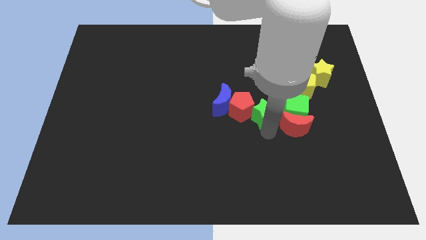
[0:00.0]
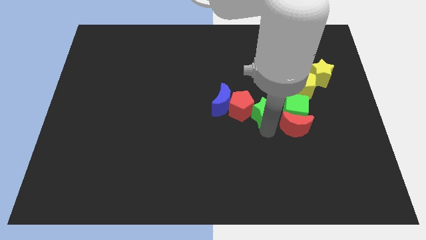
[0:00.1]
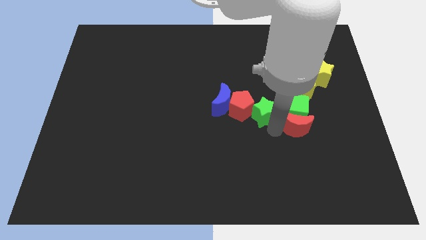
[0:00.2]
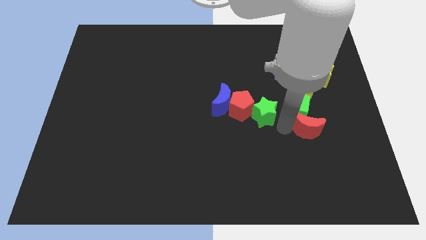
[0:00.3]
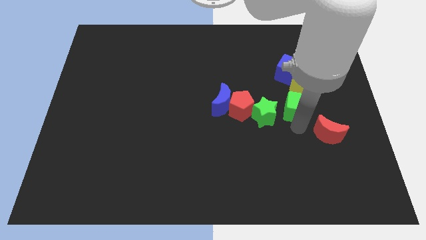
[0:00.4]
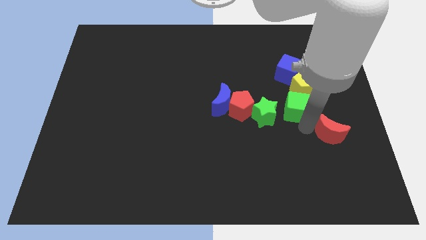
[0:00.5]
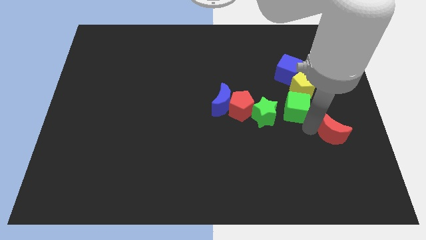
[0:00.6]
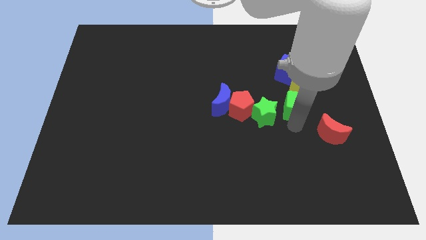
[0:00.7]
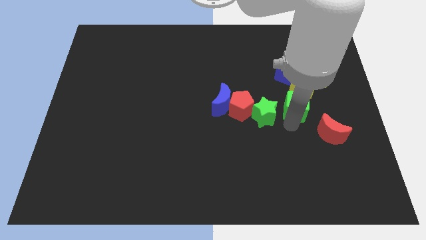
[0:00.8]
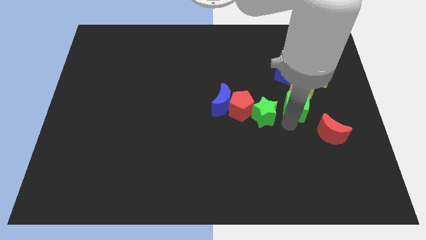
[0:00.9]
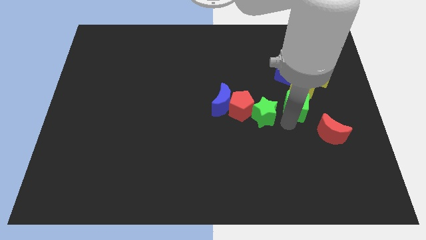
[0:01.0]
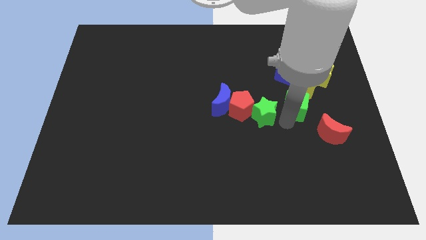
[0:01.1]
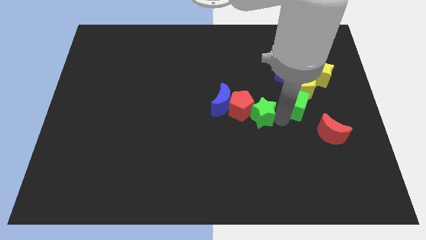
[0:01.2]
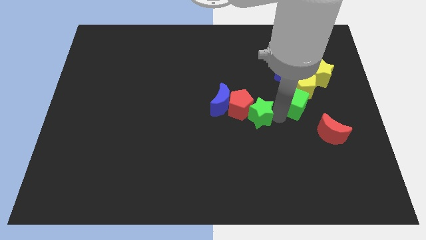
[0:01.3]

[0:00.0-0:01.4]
separate the red crescent and green cube

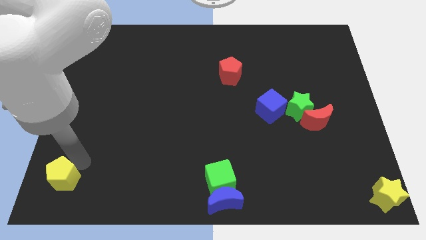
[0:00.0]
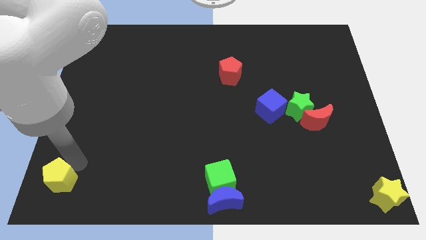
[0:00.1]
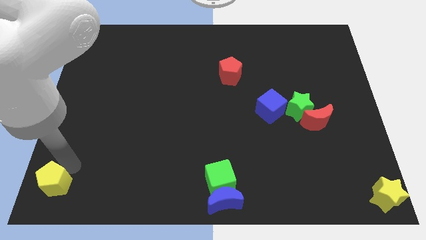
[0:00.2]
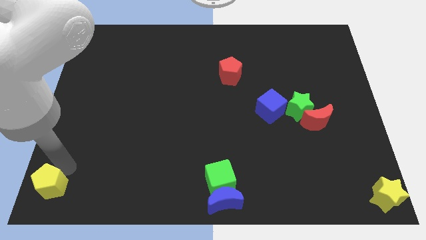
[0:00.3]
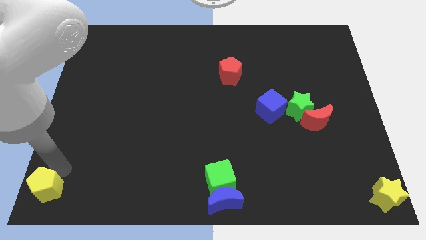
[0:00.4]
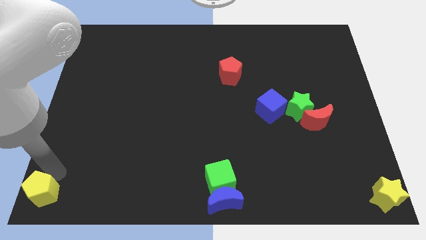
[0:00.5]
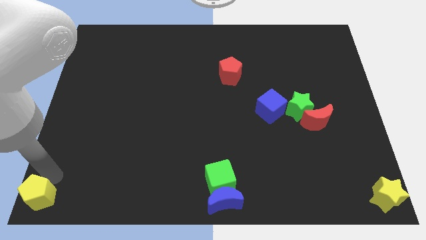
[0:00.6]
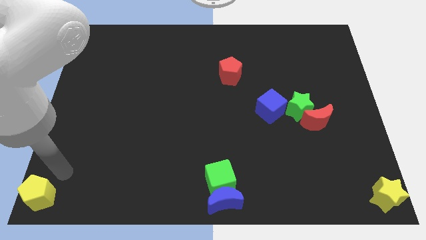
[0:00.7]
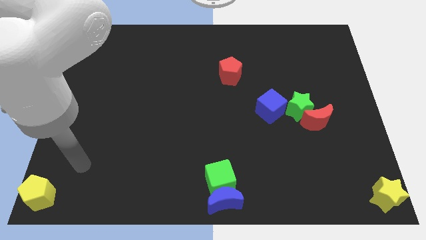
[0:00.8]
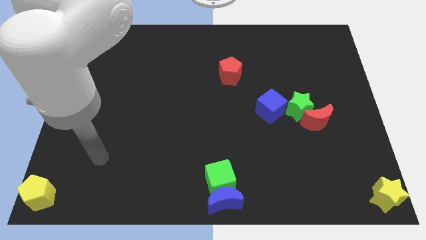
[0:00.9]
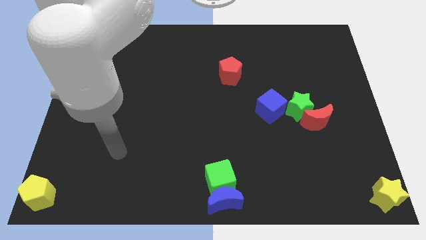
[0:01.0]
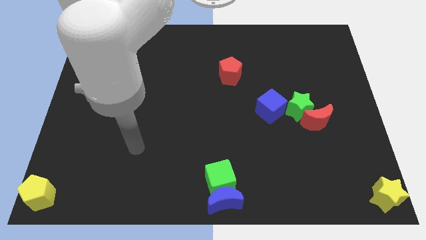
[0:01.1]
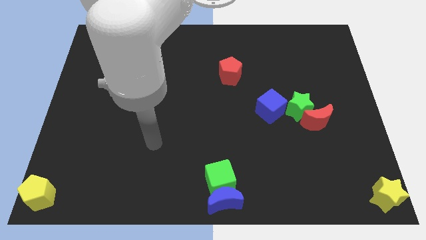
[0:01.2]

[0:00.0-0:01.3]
push the yellow pentagon to the bottom left

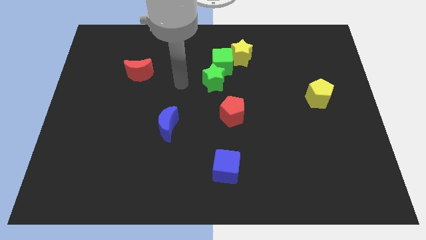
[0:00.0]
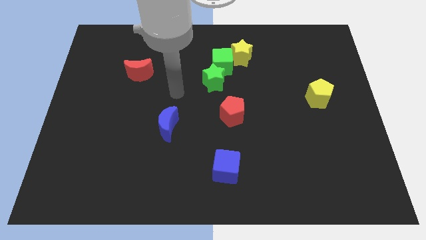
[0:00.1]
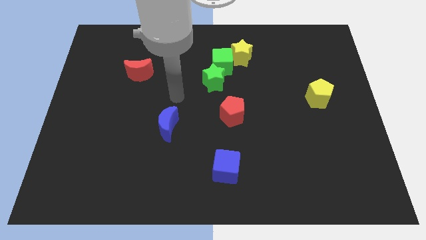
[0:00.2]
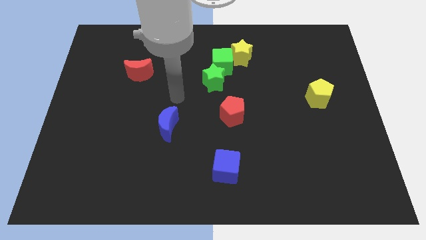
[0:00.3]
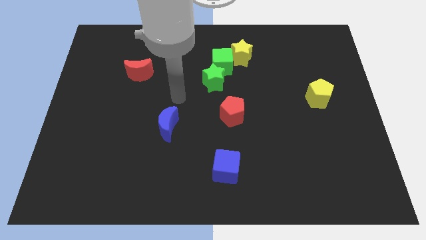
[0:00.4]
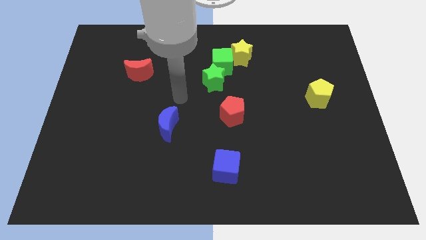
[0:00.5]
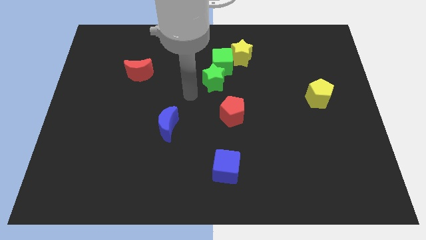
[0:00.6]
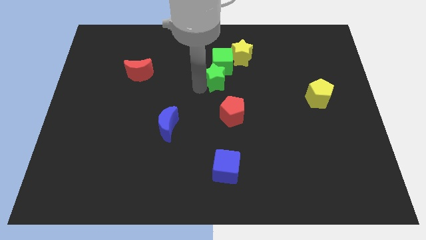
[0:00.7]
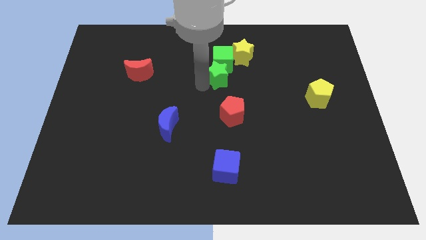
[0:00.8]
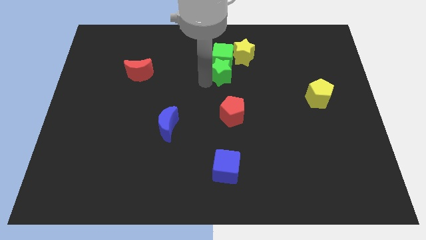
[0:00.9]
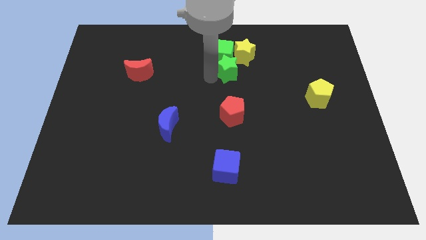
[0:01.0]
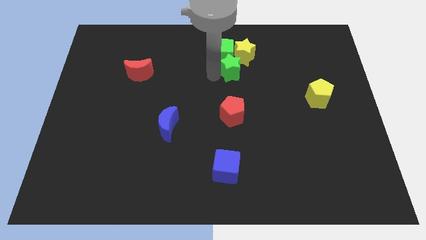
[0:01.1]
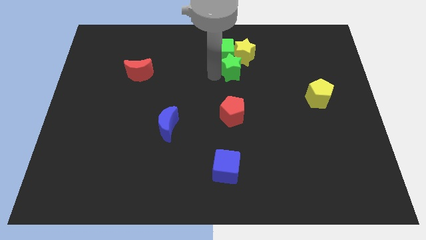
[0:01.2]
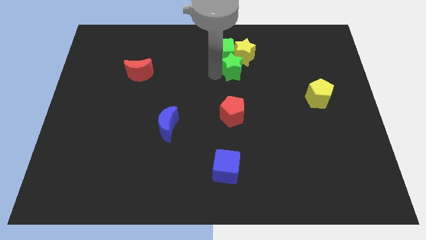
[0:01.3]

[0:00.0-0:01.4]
push the green star into the green cube and yellow star

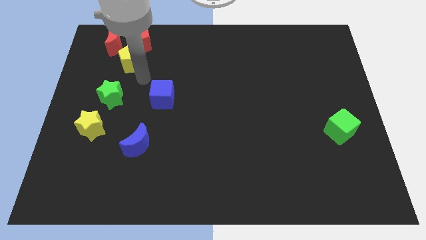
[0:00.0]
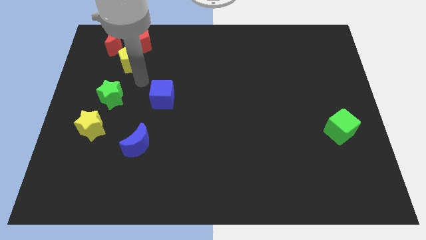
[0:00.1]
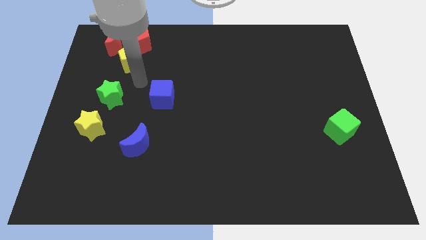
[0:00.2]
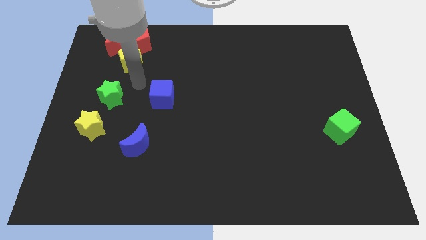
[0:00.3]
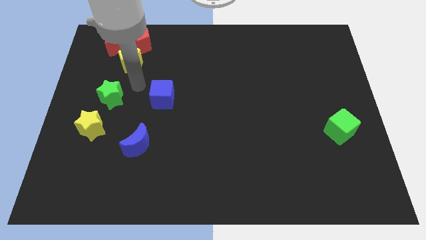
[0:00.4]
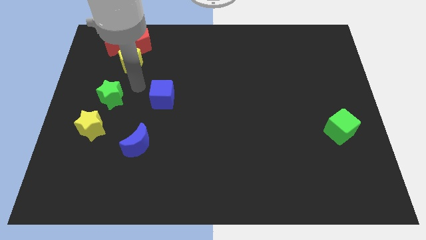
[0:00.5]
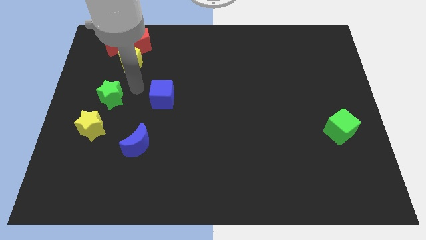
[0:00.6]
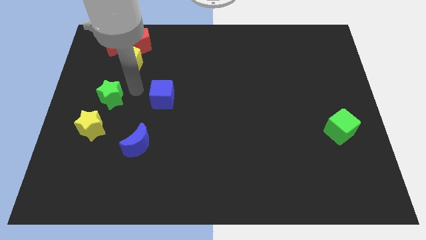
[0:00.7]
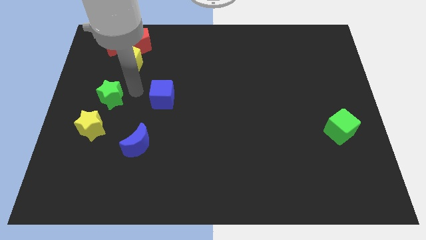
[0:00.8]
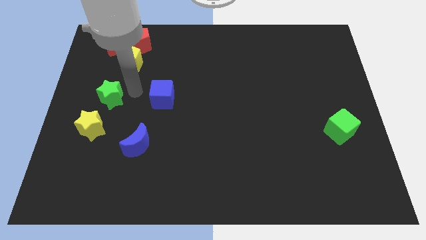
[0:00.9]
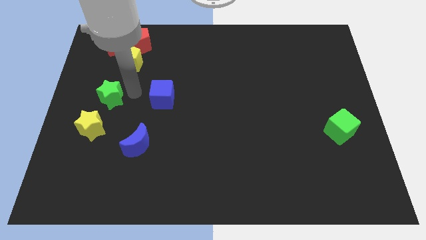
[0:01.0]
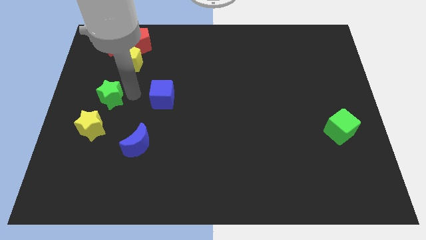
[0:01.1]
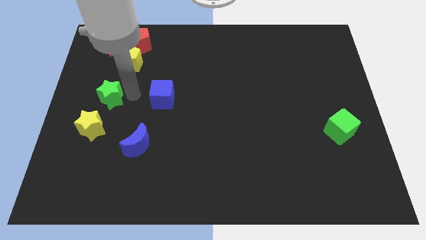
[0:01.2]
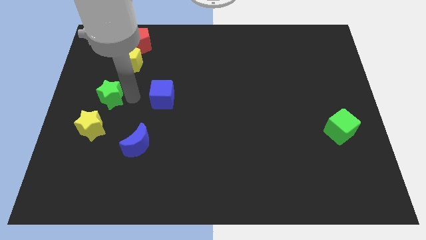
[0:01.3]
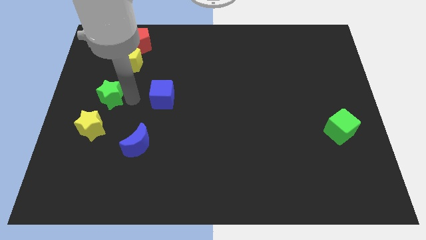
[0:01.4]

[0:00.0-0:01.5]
place your arm in between the green star and blue cube

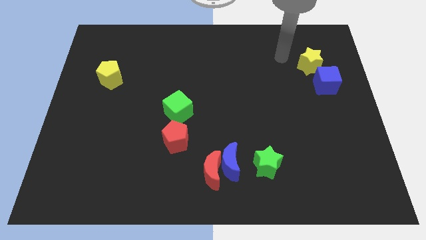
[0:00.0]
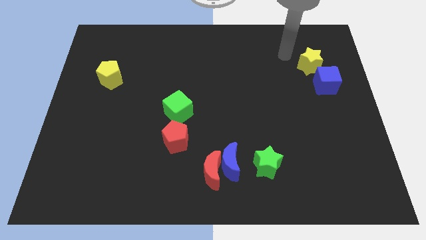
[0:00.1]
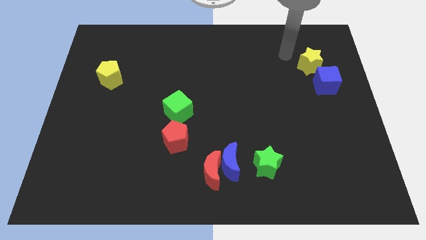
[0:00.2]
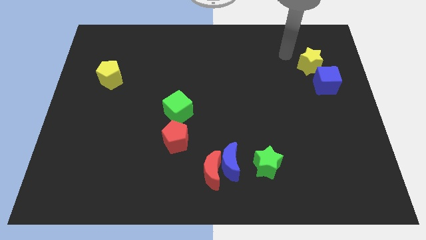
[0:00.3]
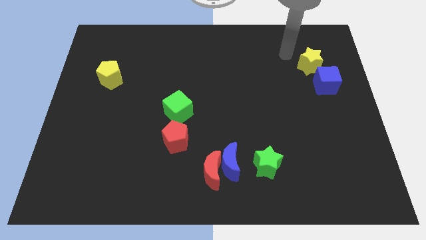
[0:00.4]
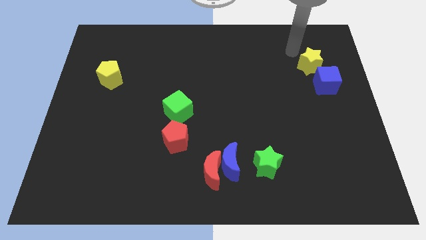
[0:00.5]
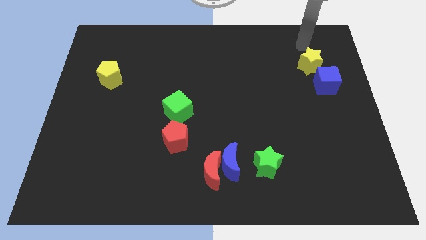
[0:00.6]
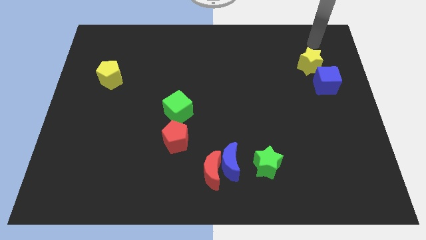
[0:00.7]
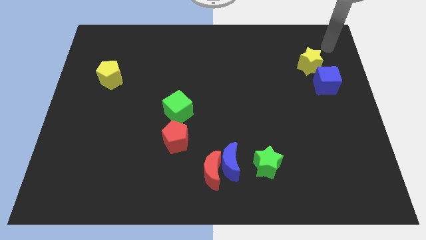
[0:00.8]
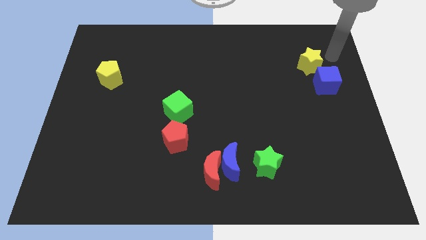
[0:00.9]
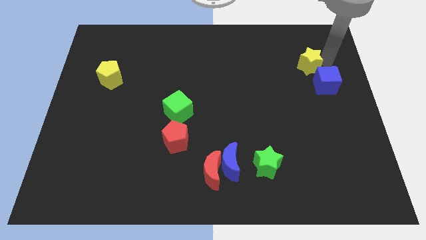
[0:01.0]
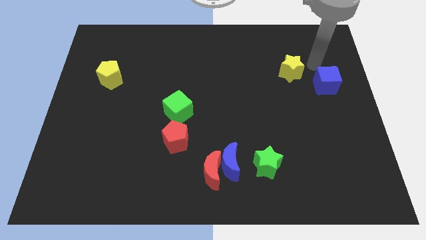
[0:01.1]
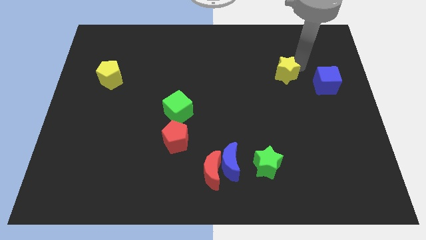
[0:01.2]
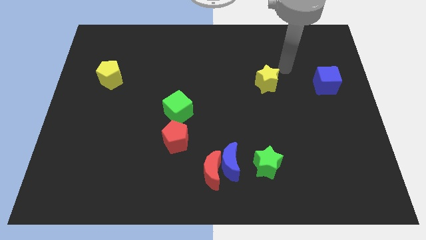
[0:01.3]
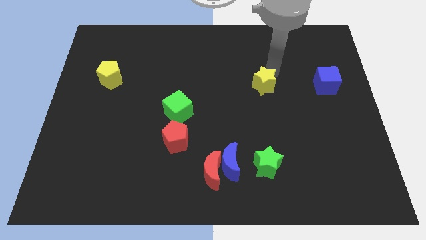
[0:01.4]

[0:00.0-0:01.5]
separate the yellow star from the blue cube

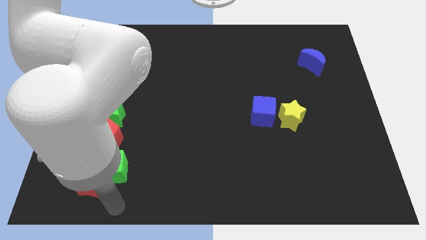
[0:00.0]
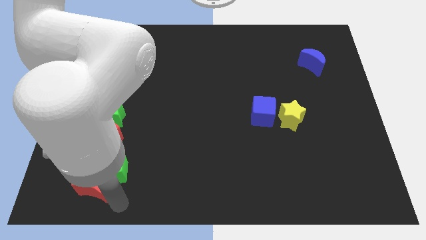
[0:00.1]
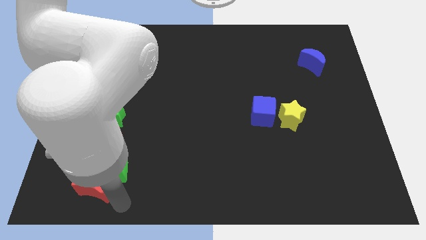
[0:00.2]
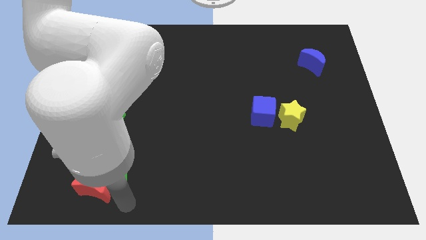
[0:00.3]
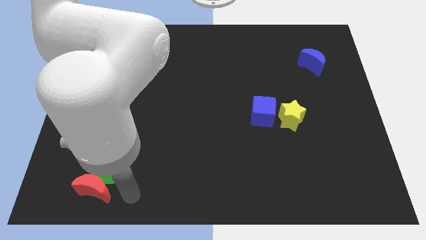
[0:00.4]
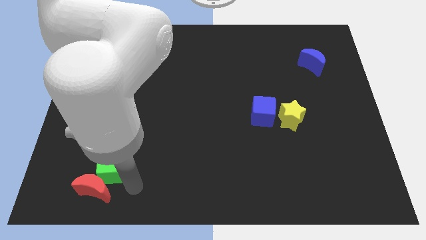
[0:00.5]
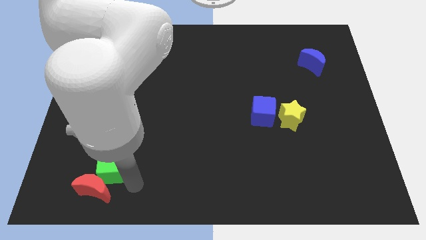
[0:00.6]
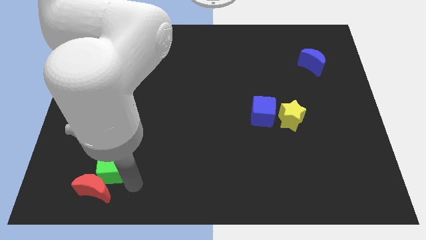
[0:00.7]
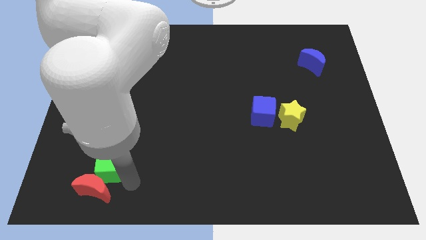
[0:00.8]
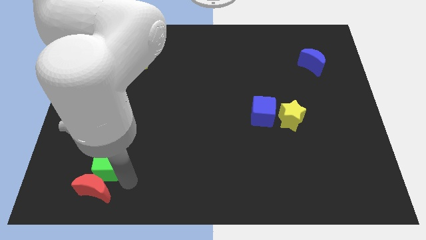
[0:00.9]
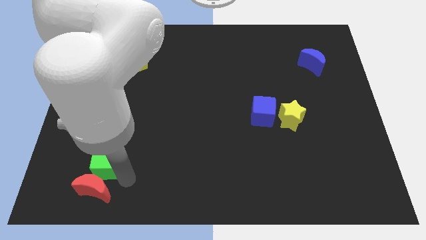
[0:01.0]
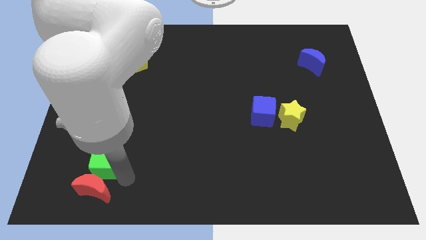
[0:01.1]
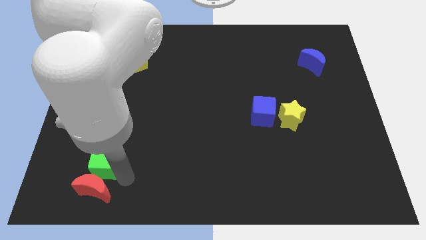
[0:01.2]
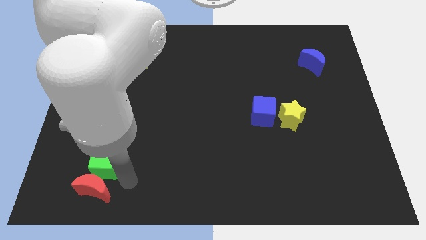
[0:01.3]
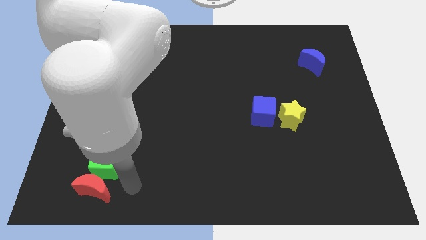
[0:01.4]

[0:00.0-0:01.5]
adjust the green cube

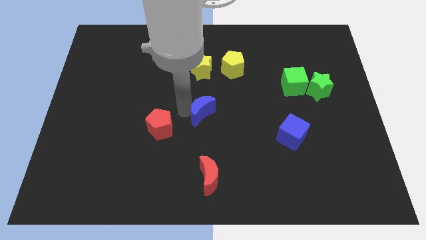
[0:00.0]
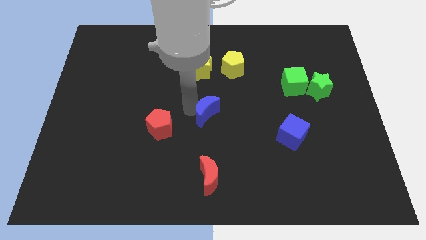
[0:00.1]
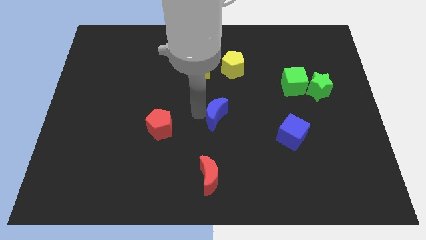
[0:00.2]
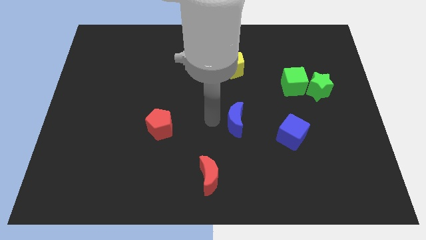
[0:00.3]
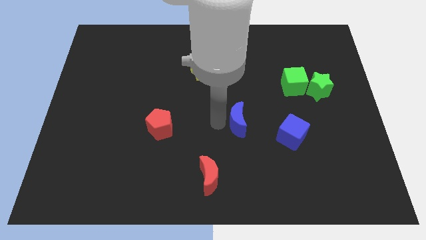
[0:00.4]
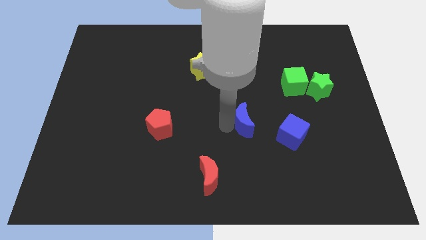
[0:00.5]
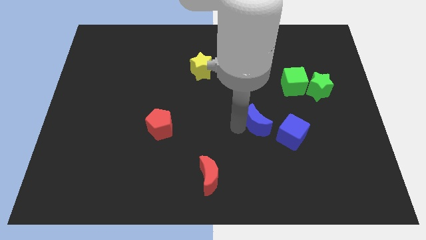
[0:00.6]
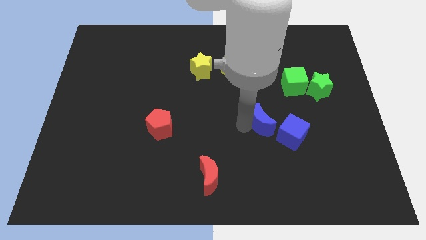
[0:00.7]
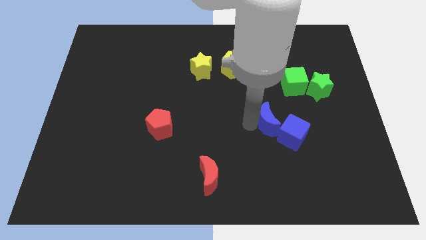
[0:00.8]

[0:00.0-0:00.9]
move blue moon towards blue cube
